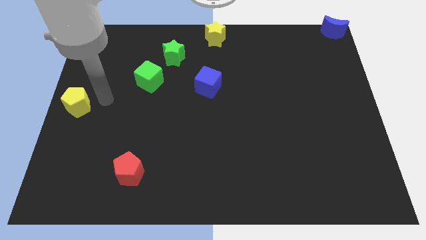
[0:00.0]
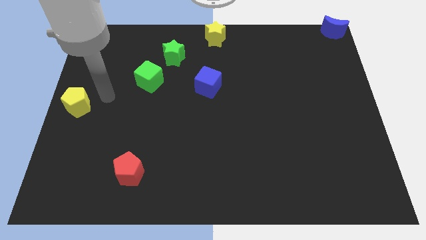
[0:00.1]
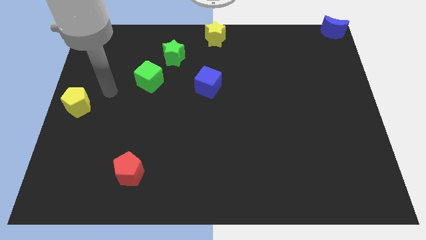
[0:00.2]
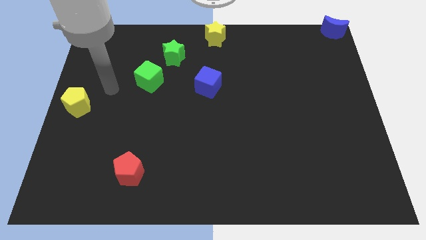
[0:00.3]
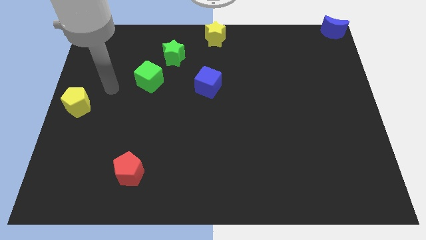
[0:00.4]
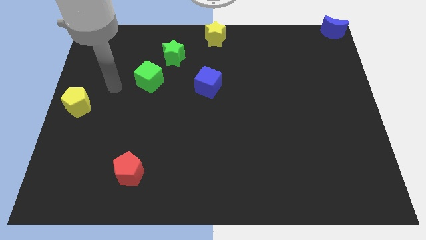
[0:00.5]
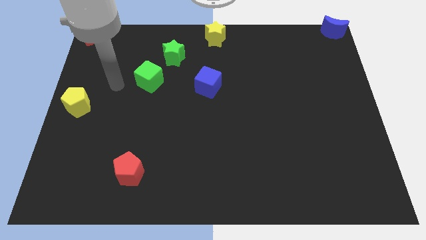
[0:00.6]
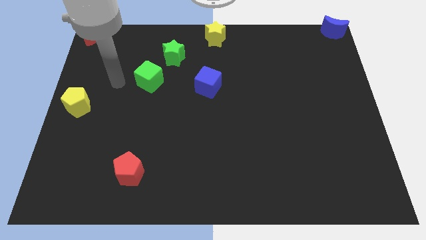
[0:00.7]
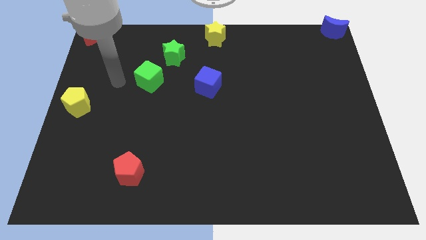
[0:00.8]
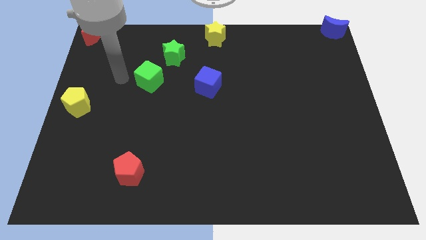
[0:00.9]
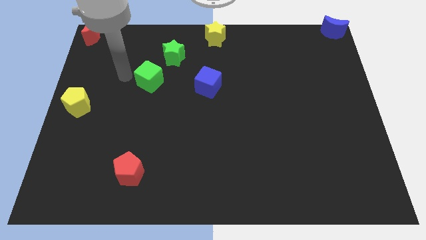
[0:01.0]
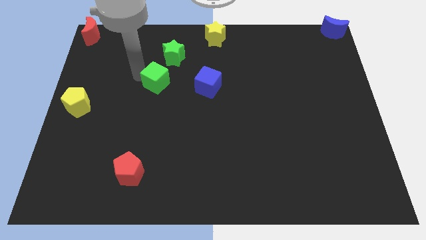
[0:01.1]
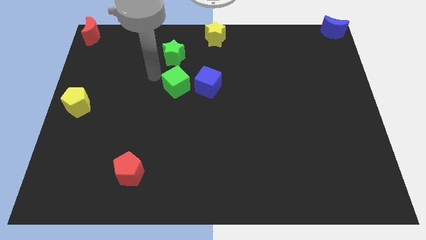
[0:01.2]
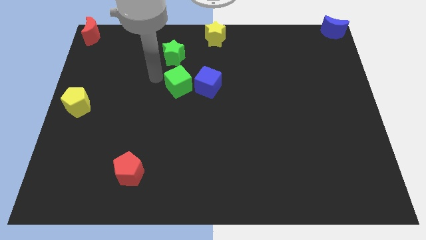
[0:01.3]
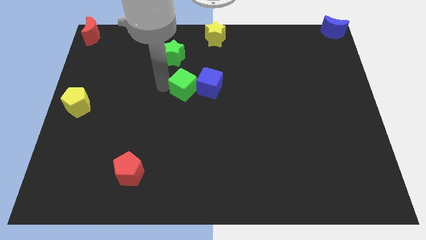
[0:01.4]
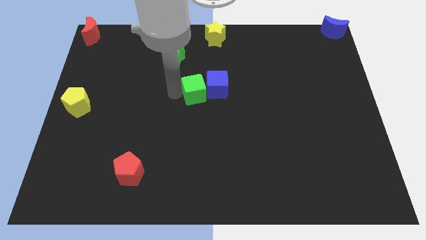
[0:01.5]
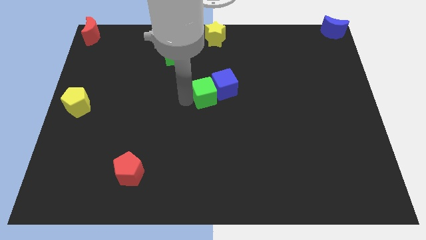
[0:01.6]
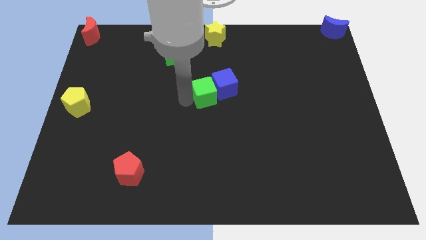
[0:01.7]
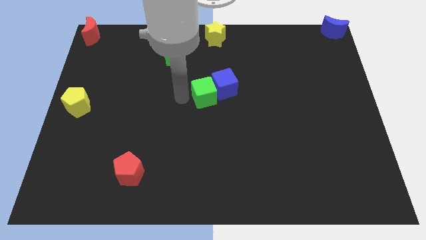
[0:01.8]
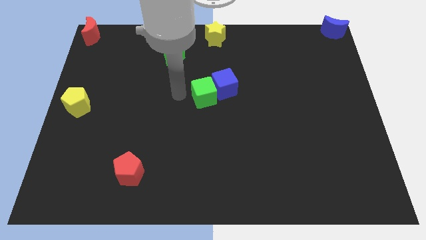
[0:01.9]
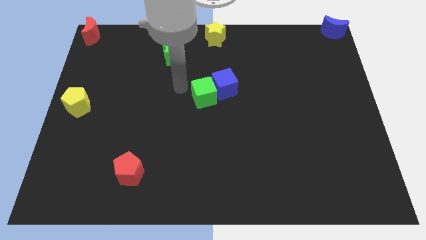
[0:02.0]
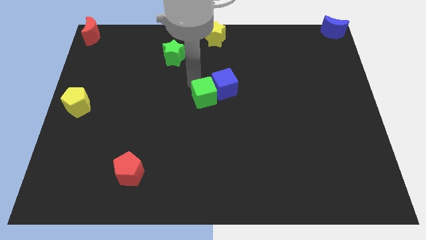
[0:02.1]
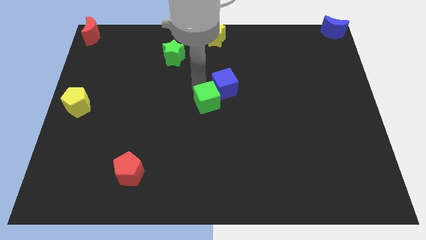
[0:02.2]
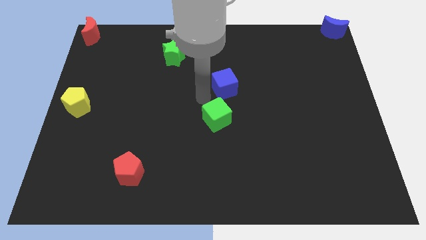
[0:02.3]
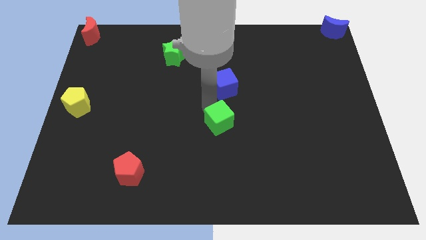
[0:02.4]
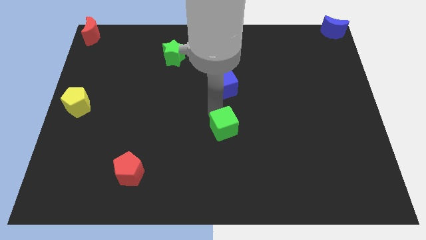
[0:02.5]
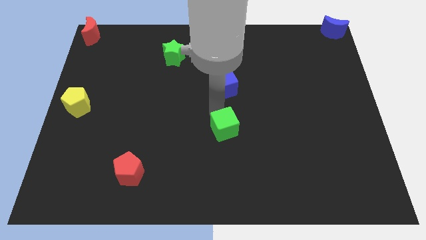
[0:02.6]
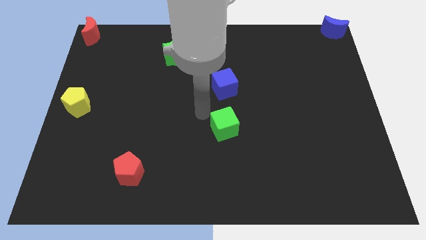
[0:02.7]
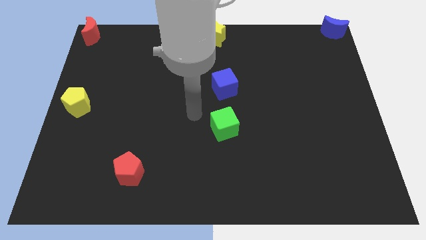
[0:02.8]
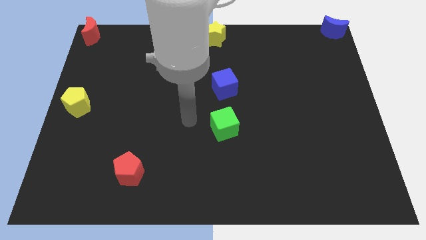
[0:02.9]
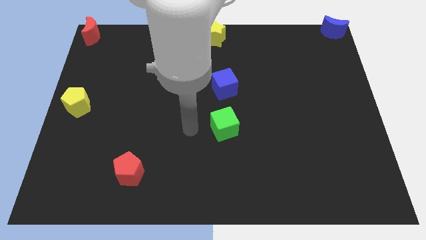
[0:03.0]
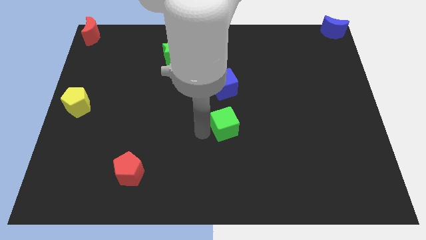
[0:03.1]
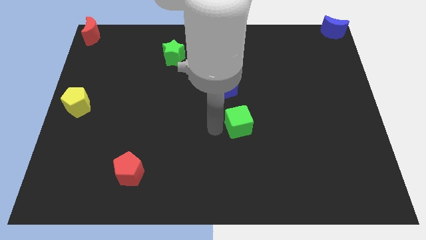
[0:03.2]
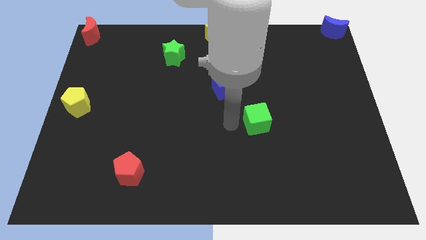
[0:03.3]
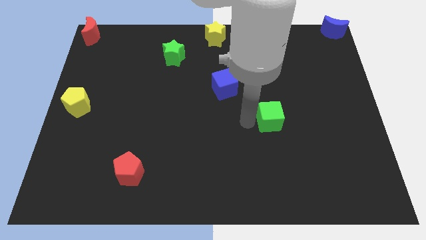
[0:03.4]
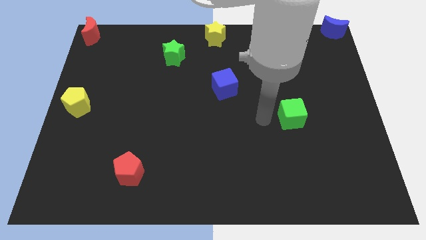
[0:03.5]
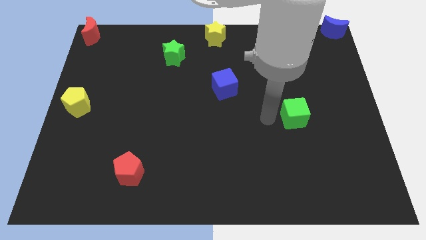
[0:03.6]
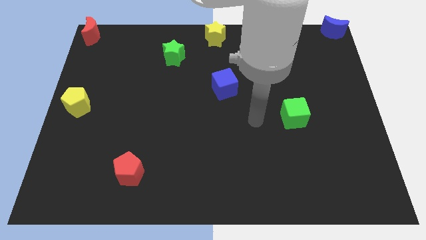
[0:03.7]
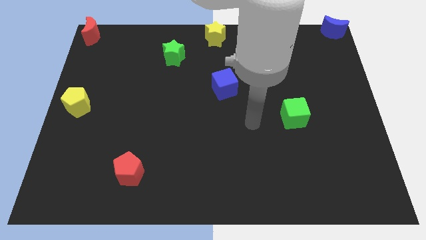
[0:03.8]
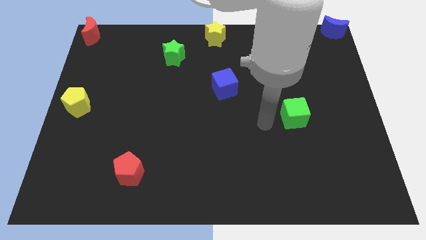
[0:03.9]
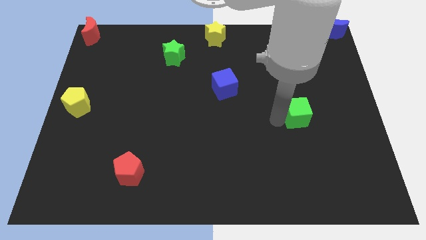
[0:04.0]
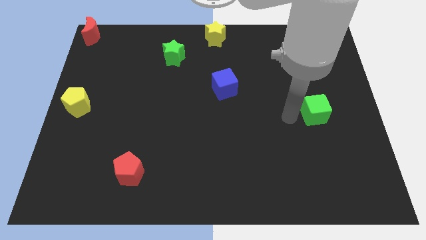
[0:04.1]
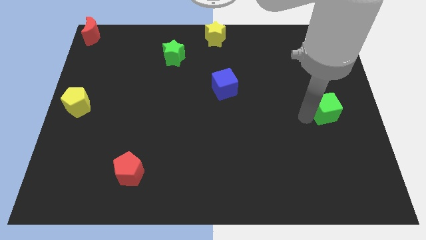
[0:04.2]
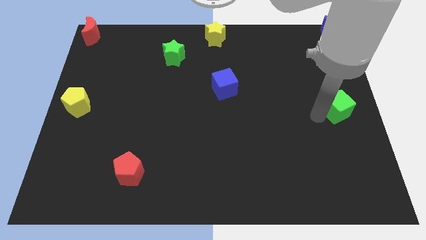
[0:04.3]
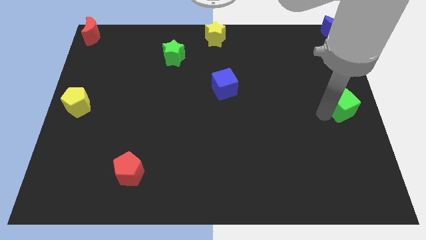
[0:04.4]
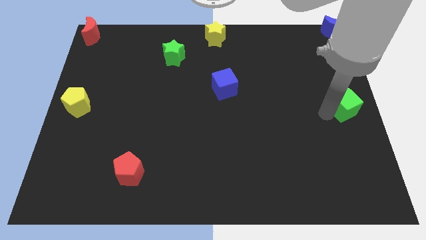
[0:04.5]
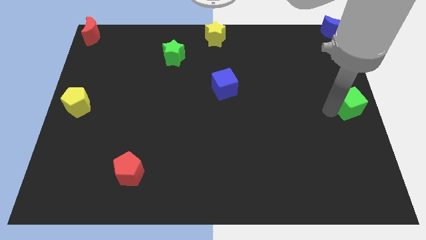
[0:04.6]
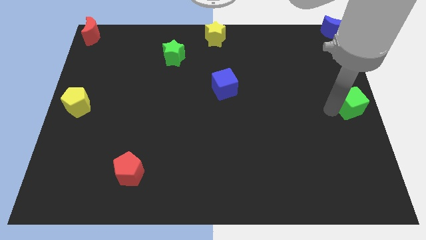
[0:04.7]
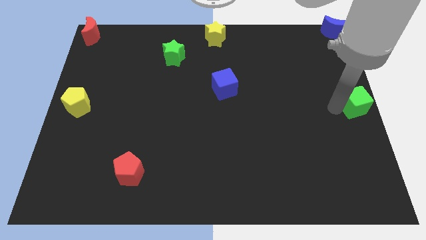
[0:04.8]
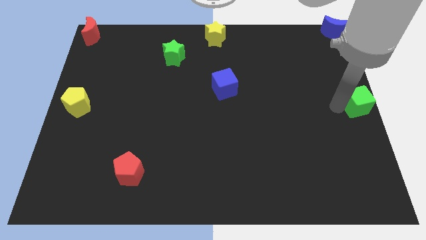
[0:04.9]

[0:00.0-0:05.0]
move the green cube to the right center of the board

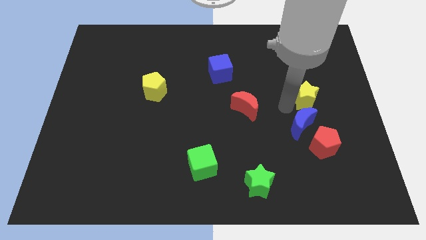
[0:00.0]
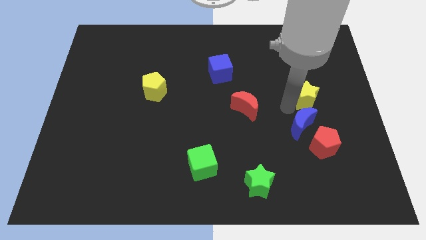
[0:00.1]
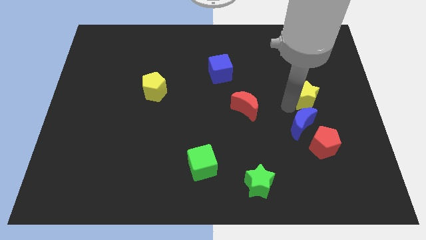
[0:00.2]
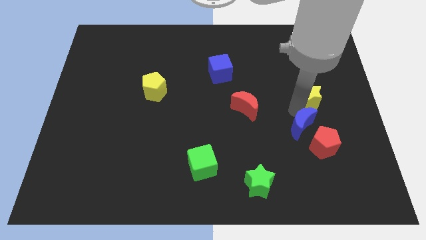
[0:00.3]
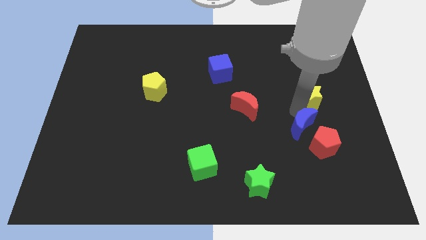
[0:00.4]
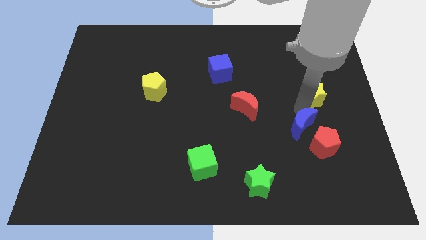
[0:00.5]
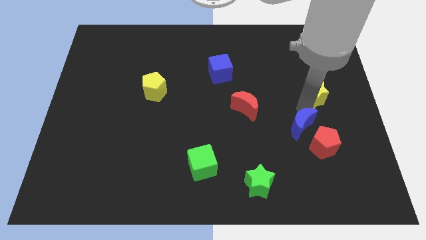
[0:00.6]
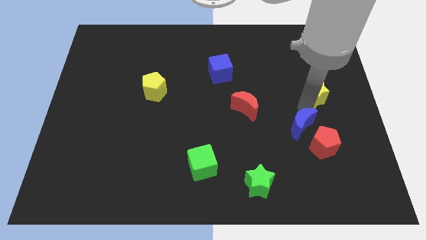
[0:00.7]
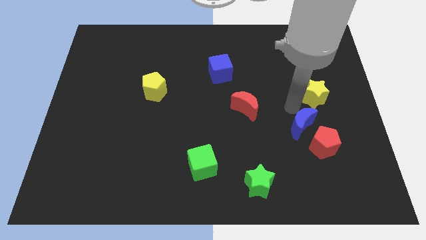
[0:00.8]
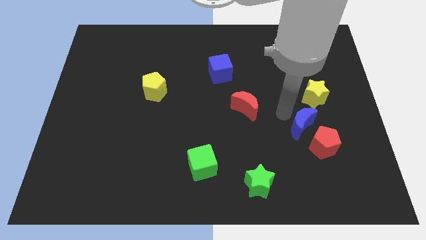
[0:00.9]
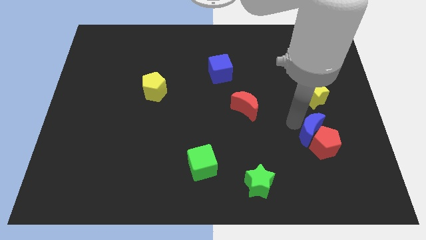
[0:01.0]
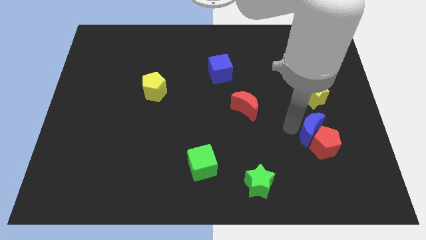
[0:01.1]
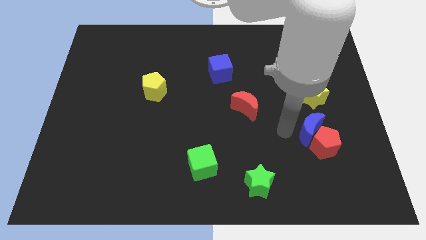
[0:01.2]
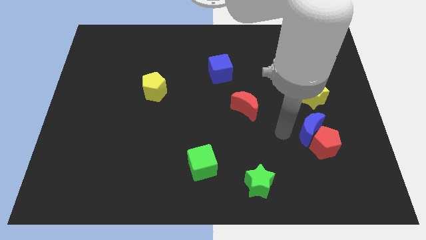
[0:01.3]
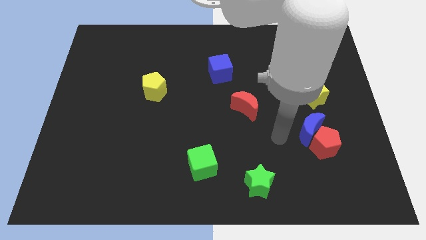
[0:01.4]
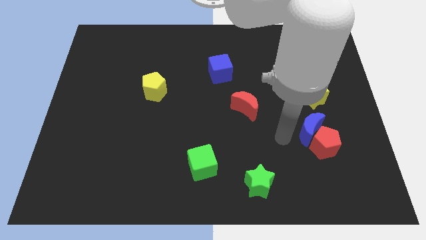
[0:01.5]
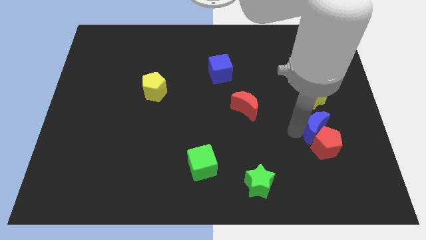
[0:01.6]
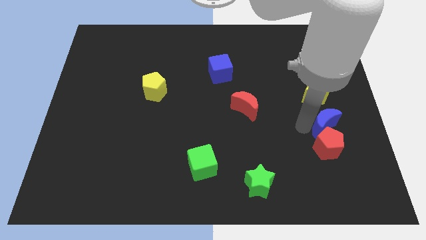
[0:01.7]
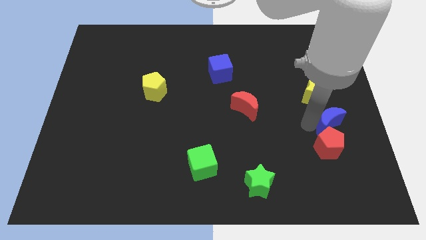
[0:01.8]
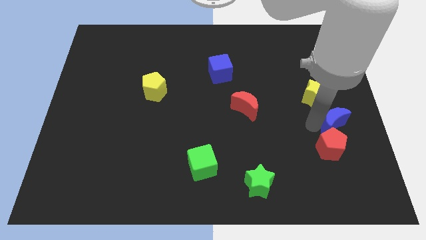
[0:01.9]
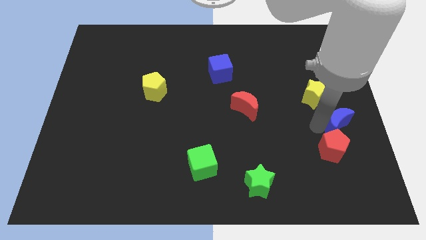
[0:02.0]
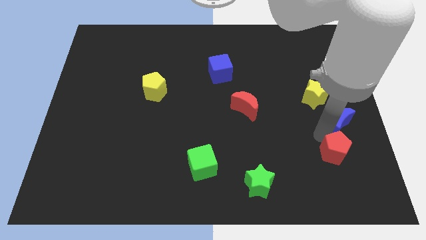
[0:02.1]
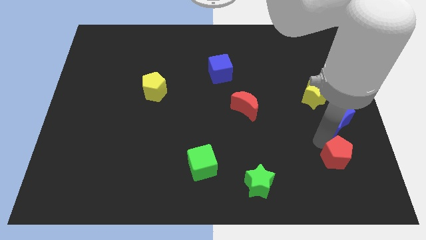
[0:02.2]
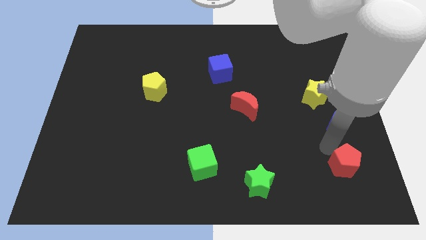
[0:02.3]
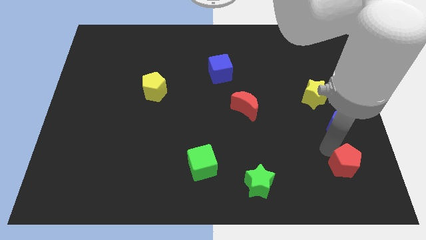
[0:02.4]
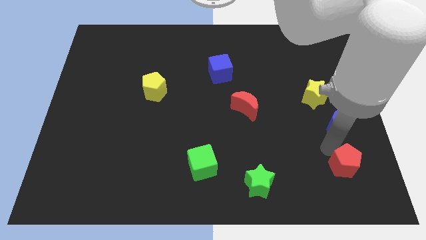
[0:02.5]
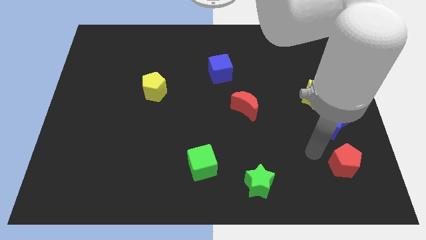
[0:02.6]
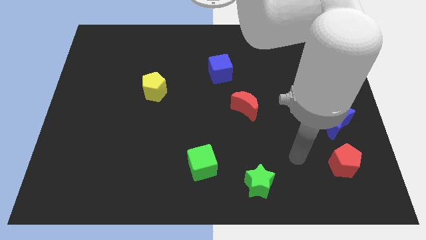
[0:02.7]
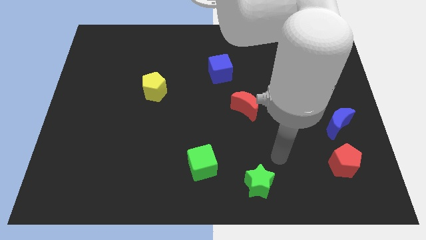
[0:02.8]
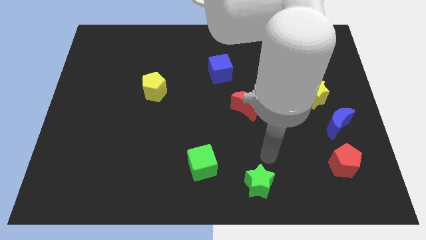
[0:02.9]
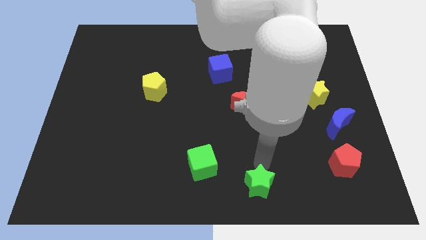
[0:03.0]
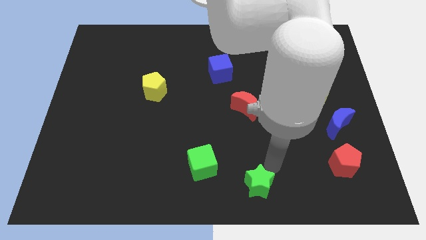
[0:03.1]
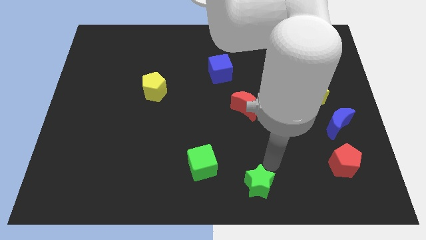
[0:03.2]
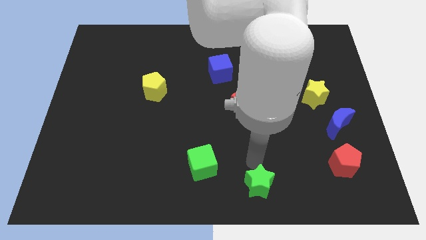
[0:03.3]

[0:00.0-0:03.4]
move the blue moon to the right

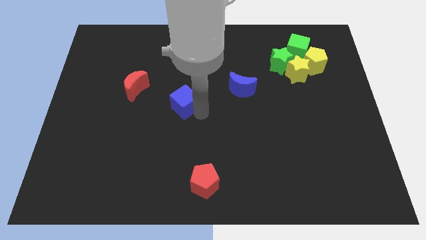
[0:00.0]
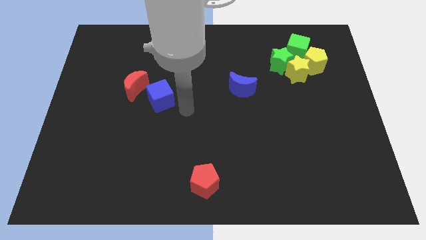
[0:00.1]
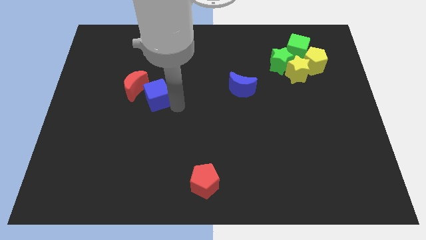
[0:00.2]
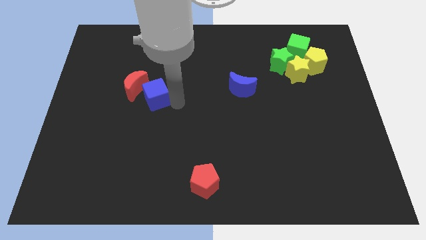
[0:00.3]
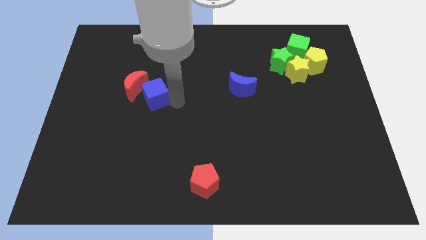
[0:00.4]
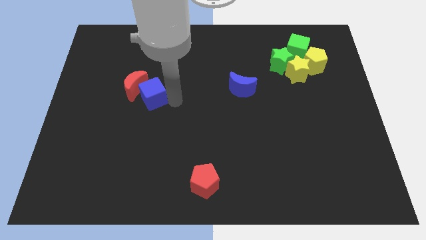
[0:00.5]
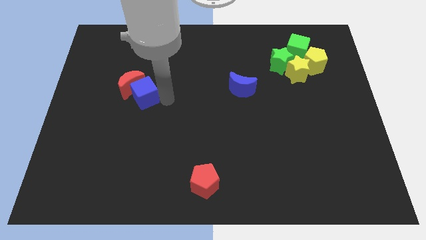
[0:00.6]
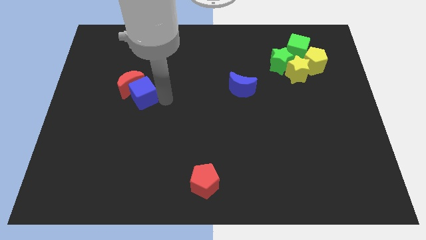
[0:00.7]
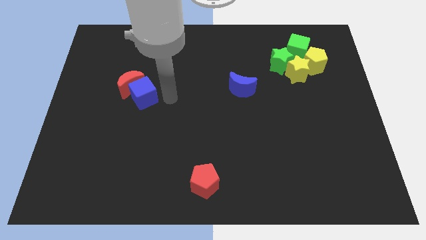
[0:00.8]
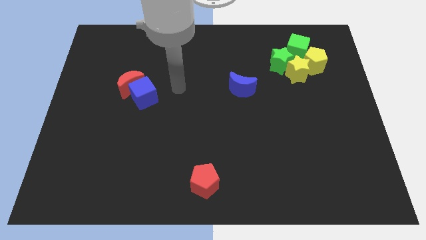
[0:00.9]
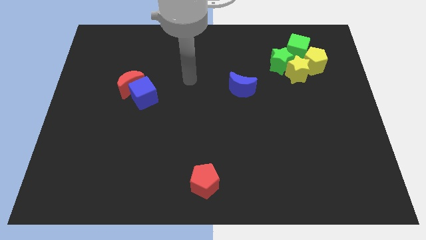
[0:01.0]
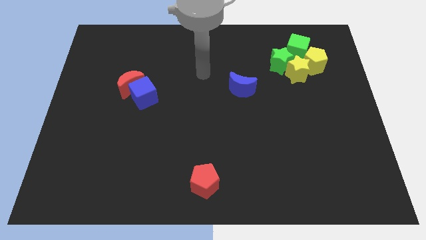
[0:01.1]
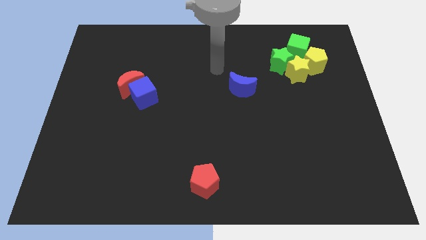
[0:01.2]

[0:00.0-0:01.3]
move the blue cube into the red moon
